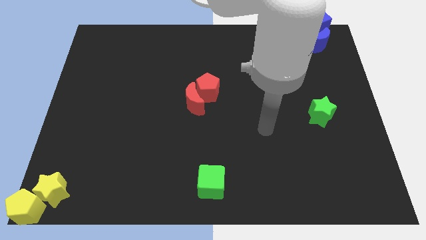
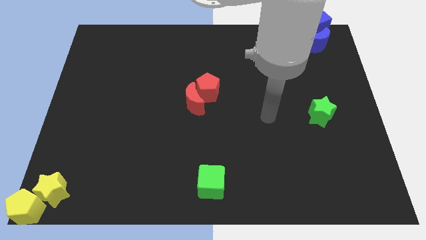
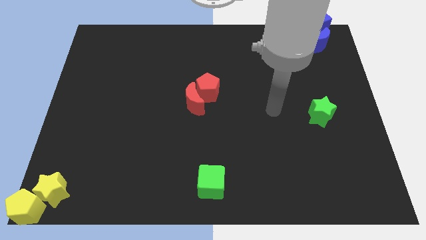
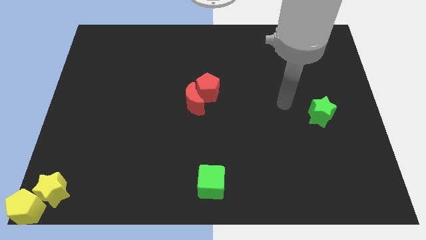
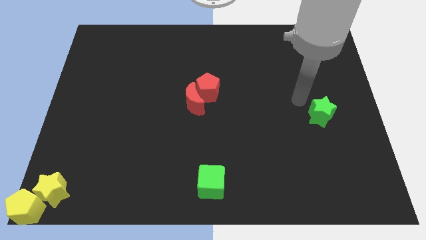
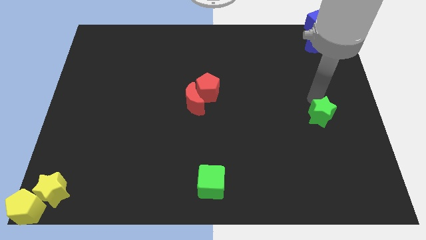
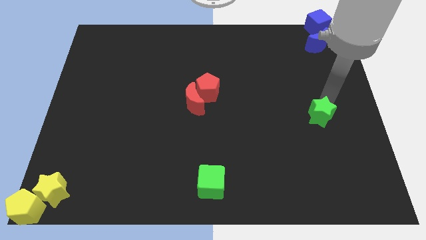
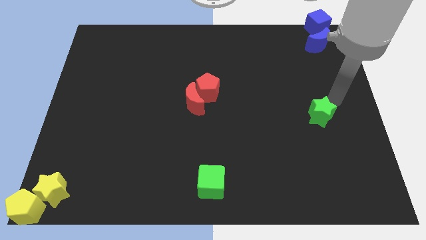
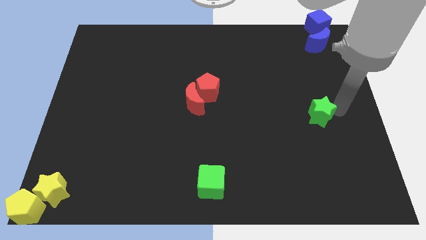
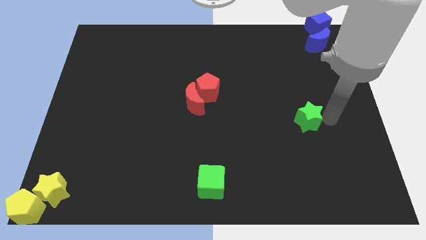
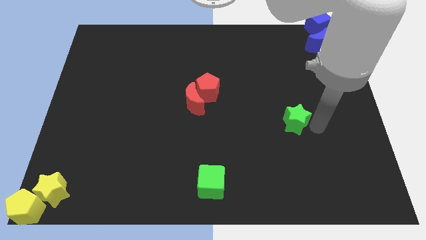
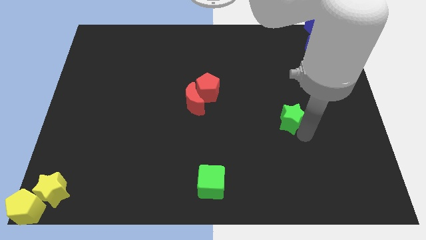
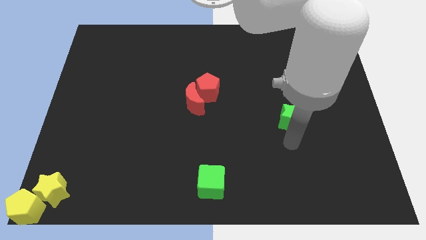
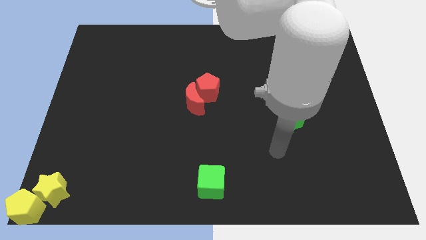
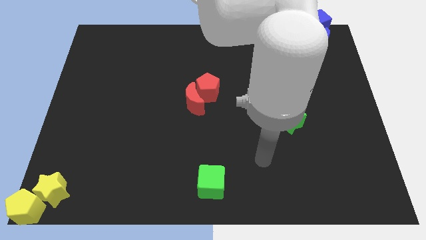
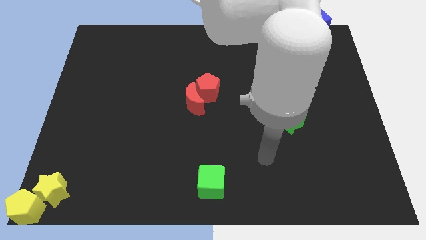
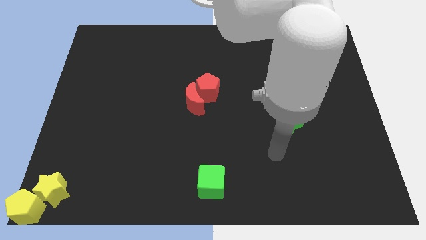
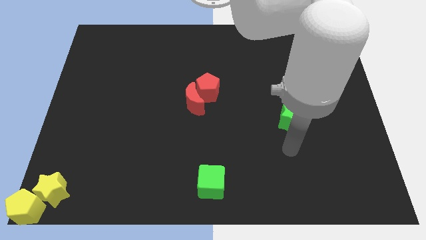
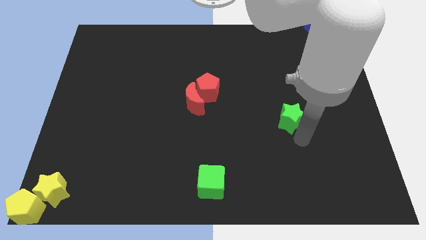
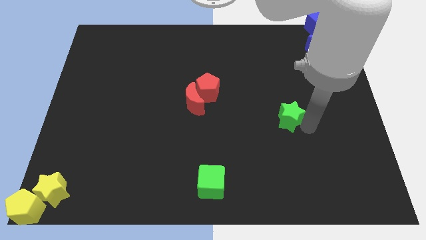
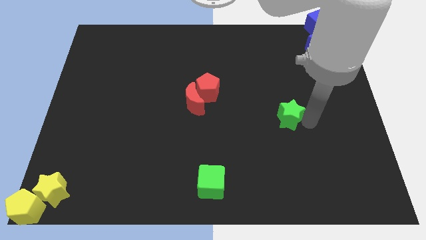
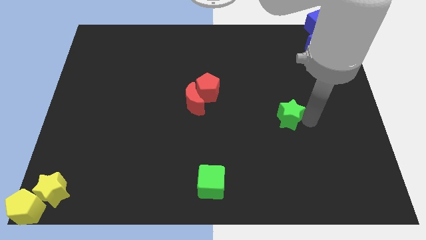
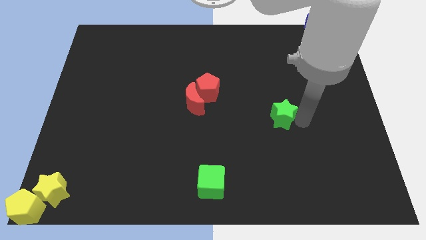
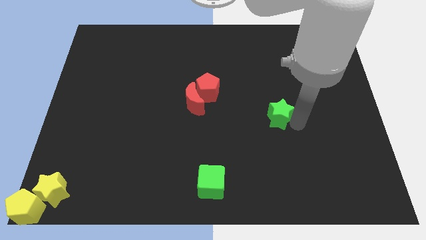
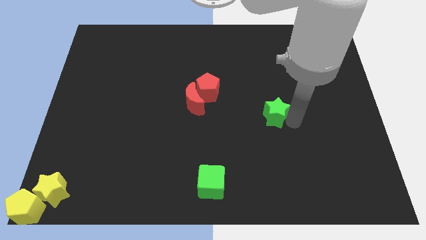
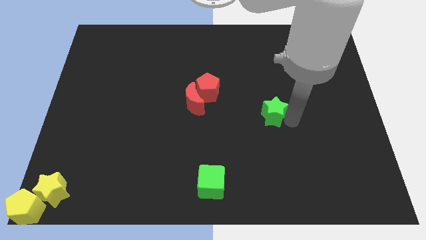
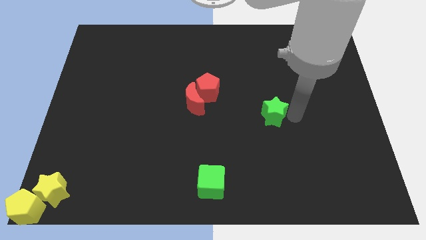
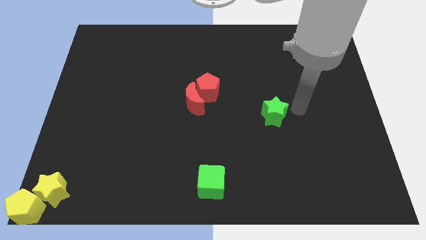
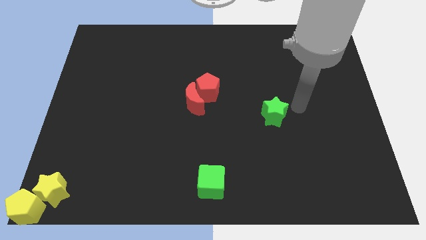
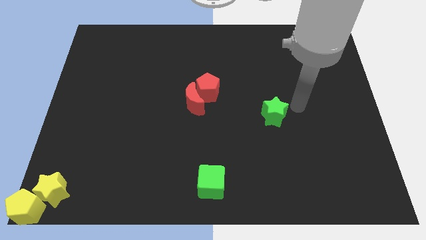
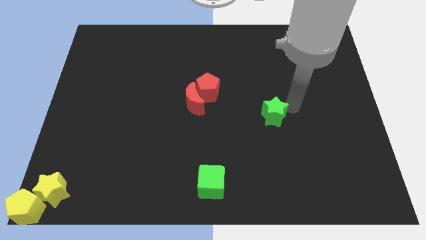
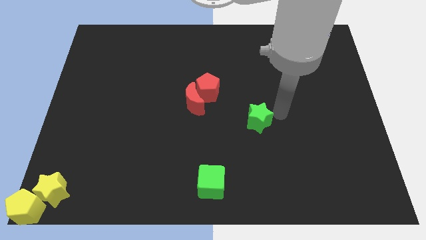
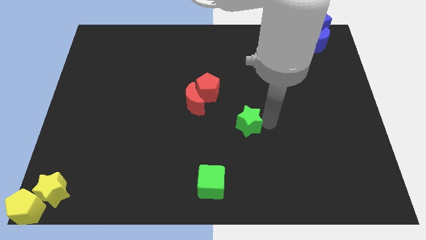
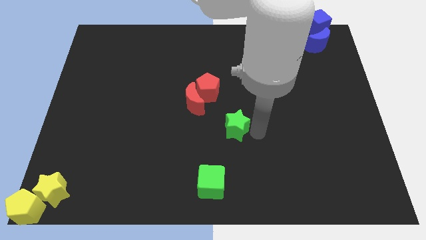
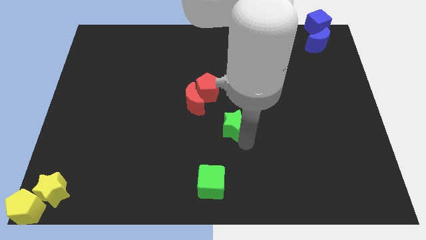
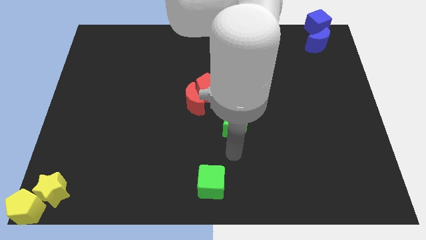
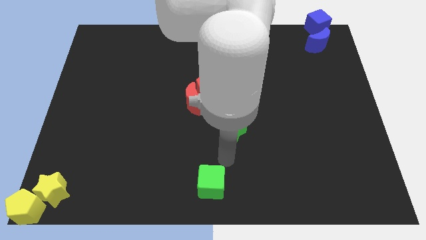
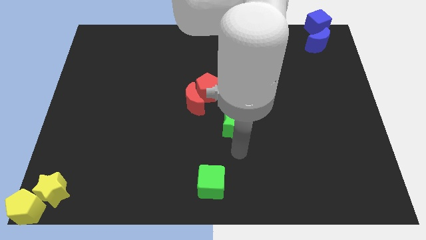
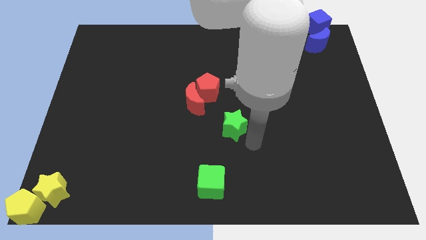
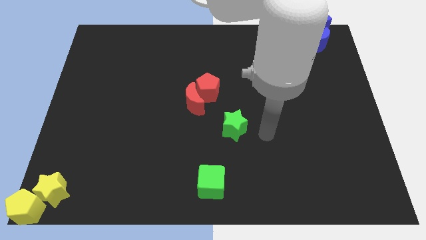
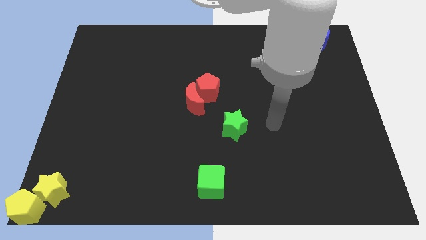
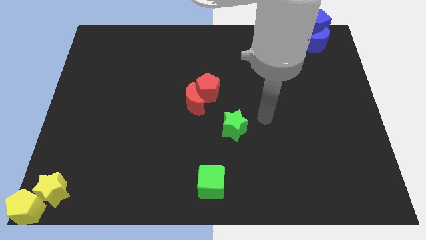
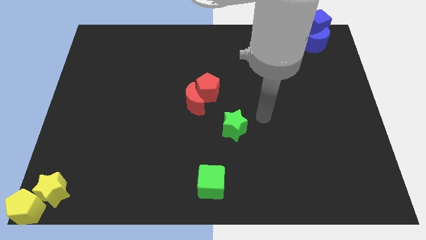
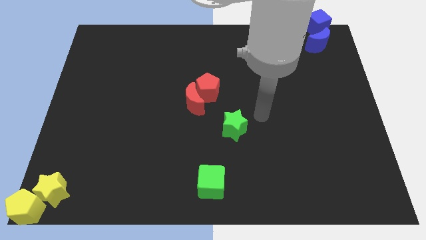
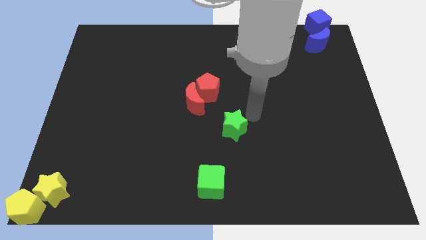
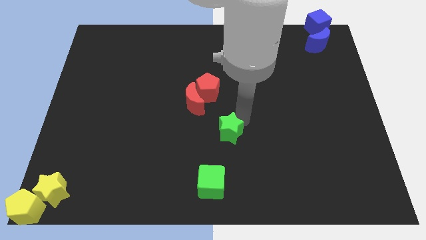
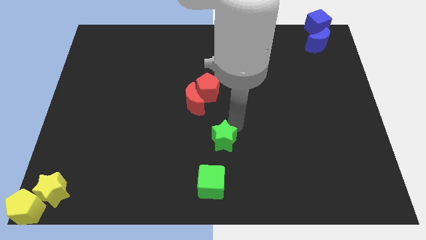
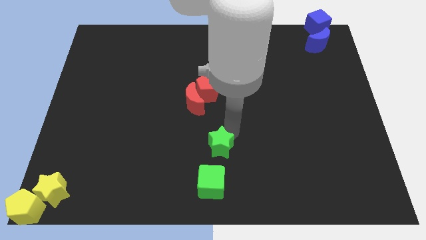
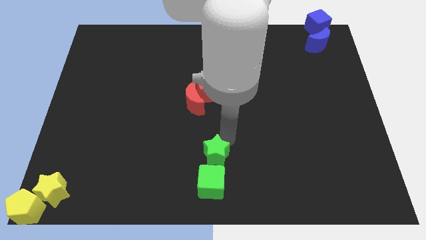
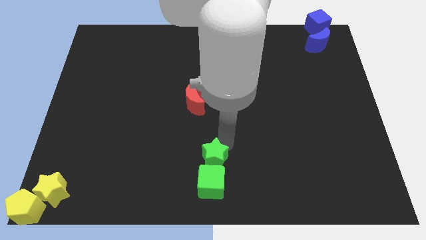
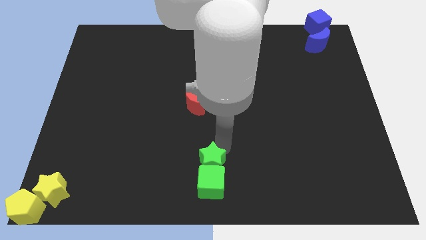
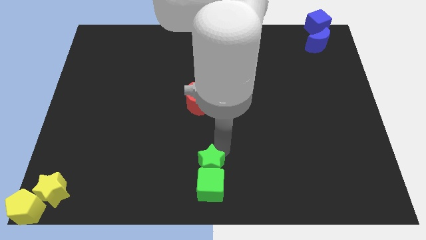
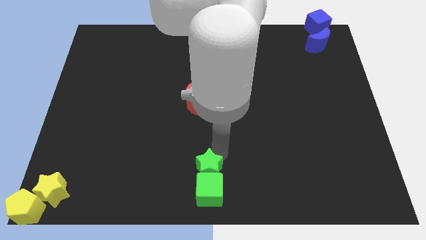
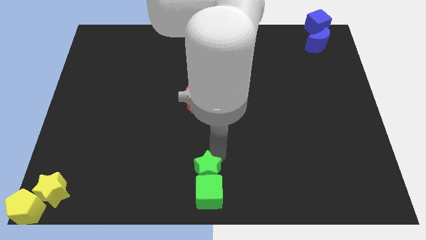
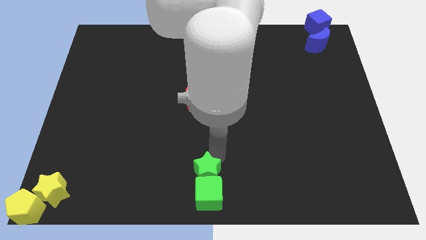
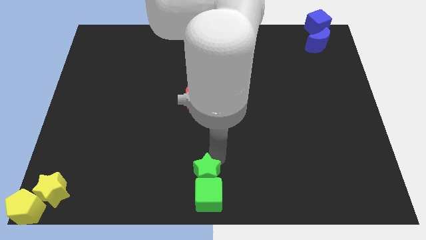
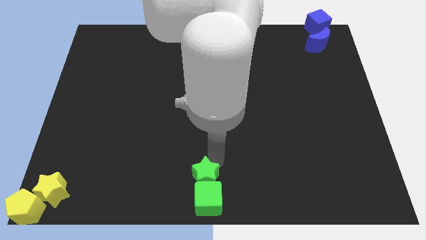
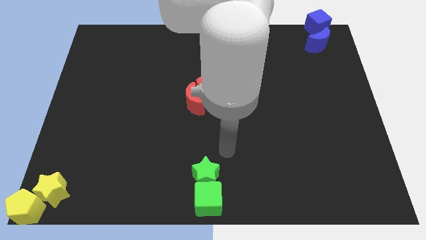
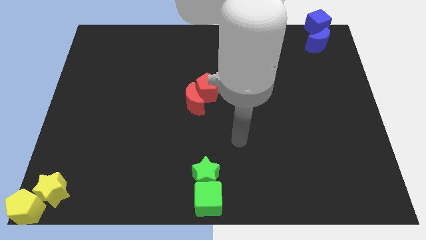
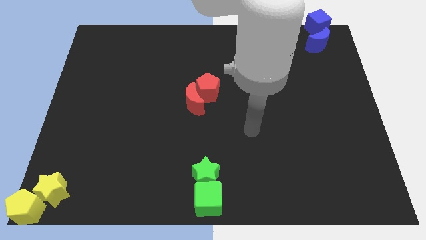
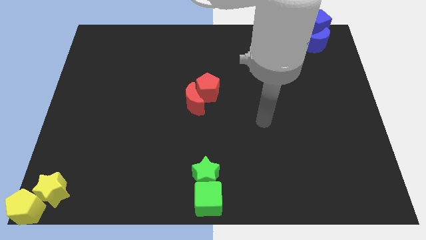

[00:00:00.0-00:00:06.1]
add green star into green cube

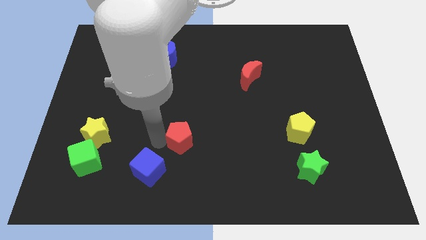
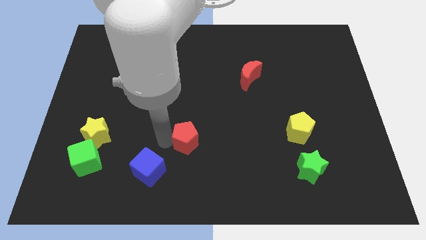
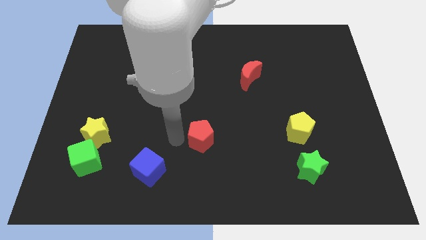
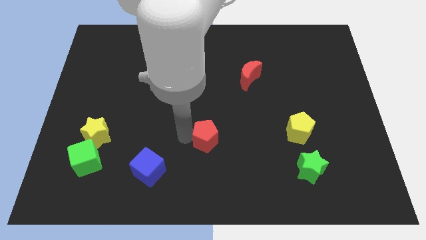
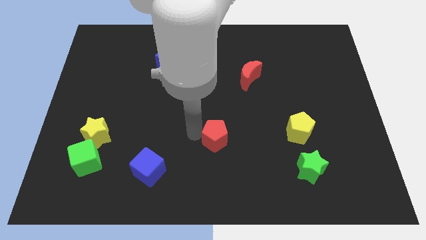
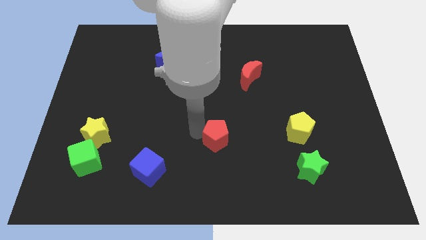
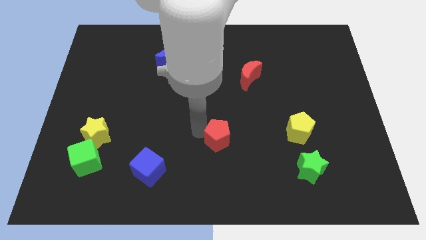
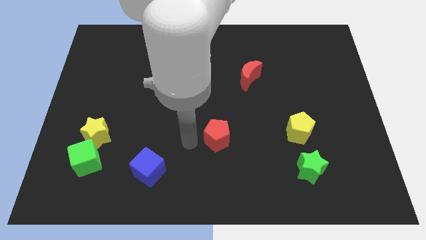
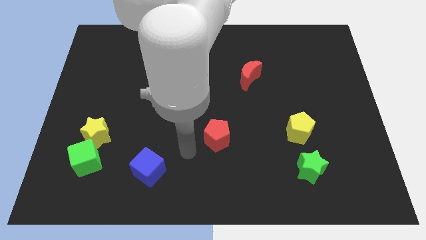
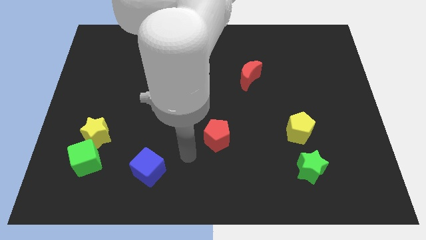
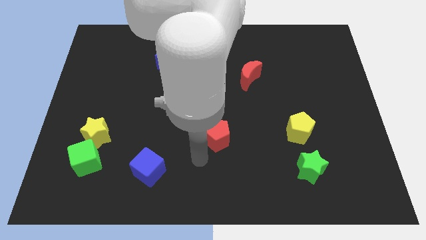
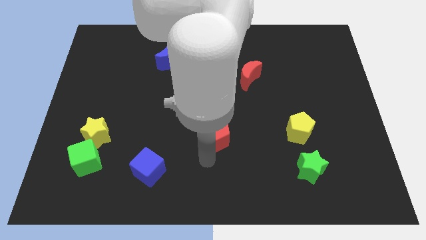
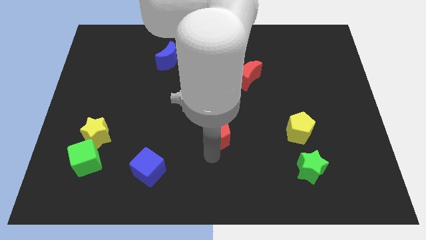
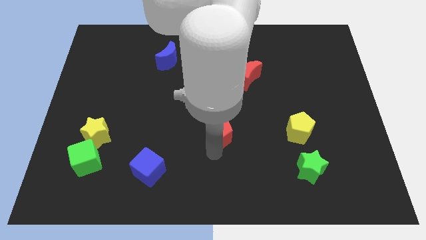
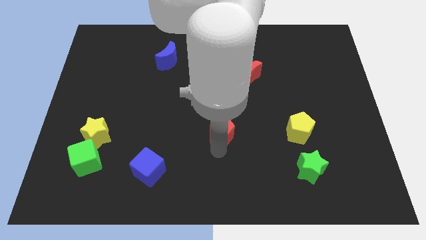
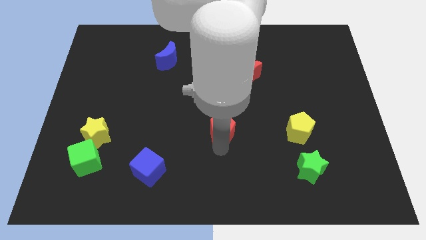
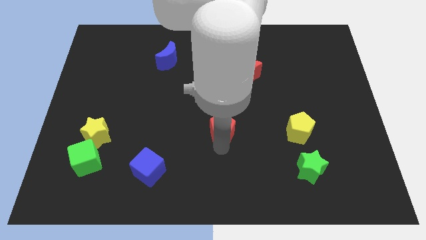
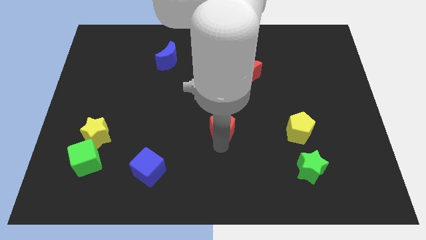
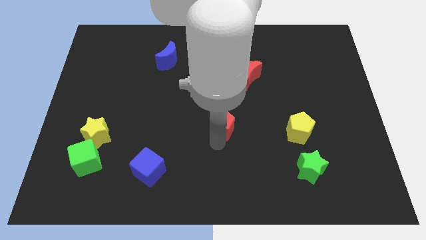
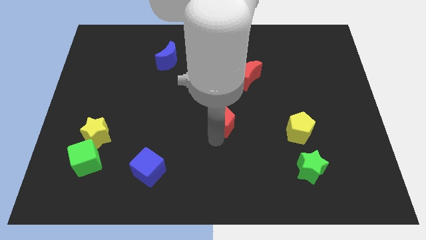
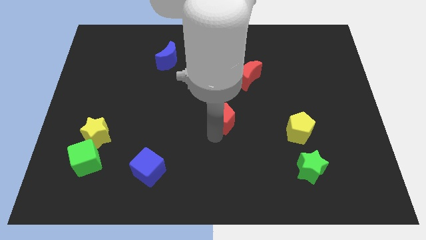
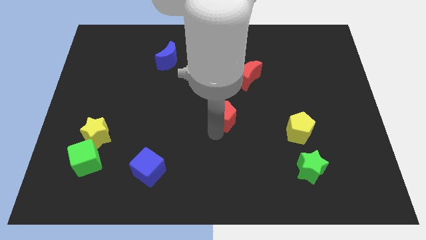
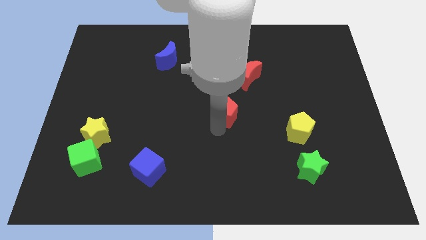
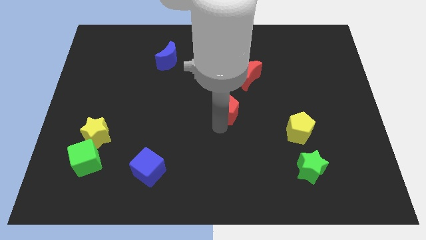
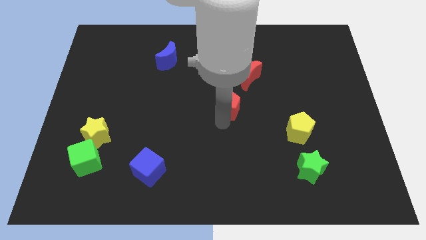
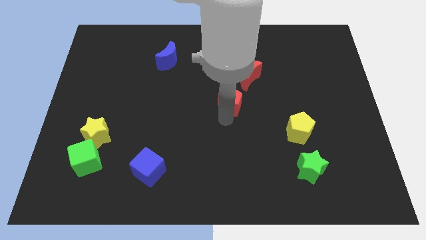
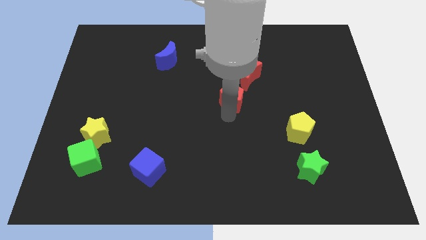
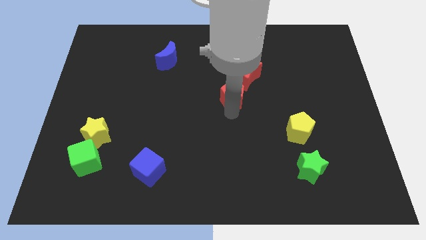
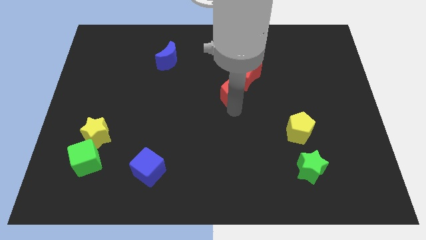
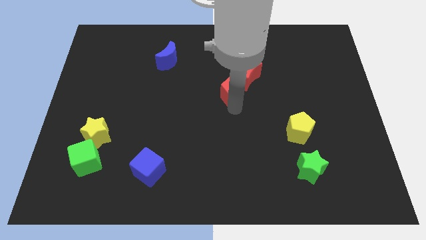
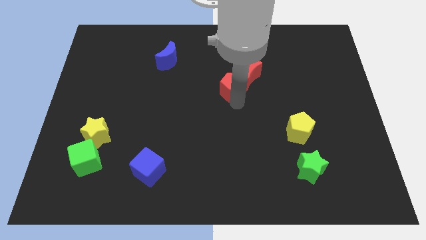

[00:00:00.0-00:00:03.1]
push red pentagon in to red moon
